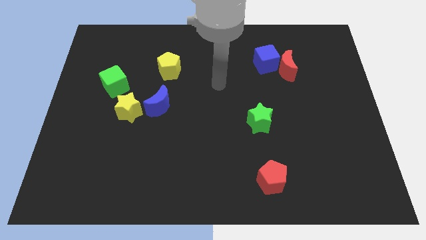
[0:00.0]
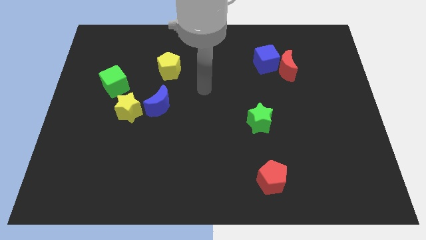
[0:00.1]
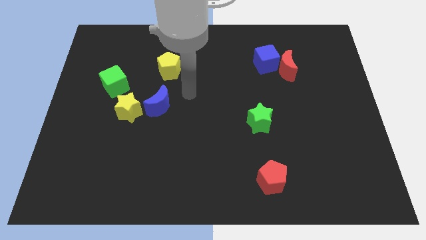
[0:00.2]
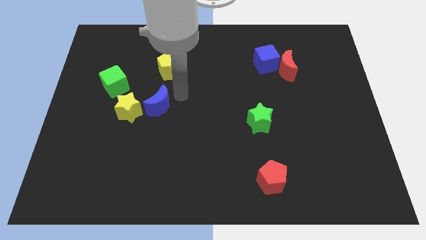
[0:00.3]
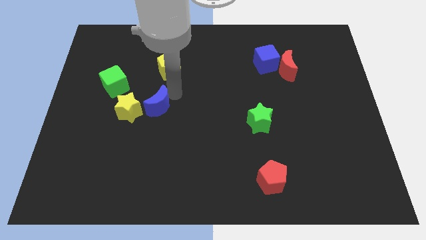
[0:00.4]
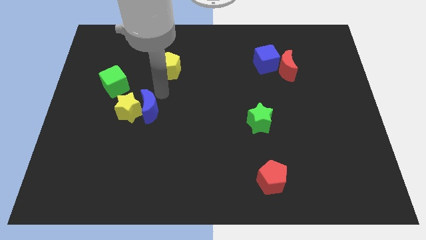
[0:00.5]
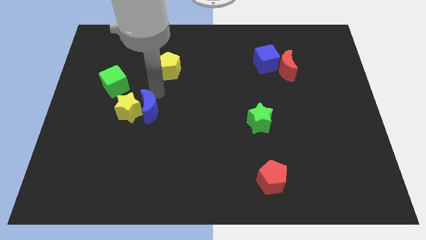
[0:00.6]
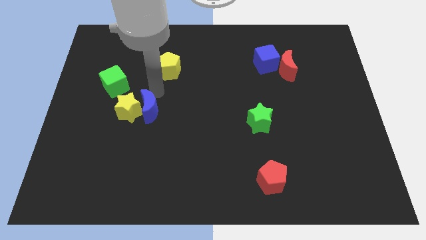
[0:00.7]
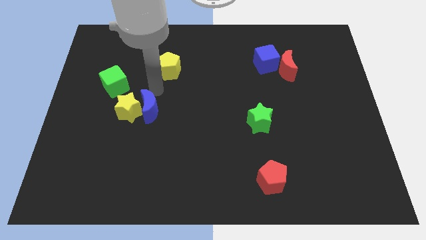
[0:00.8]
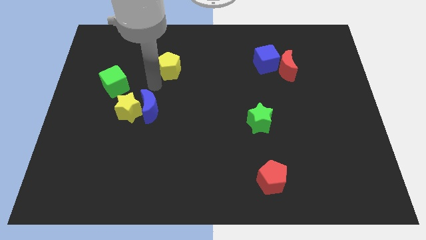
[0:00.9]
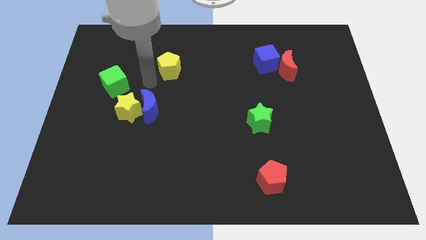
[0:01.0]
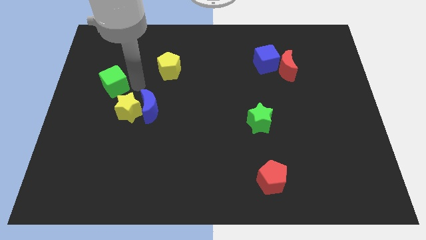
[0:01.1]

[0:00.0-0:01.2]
place your arm above the blue moon

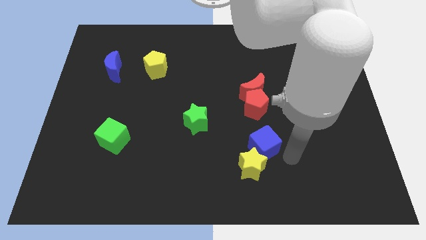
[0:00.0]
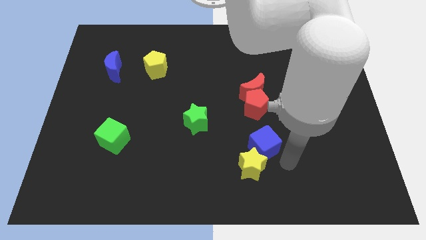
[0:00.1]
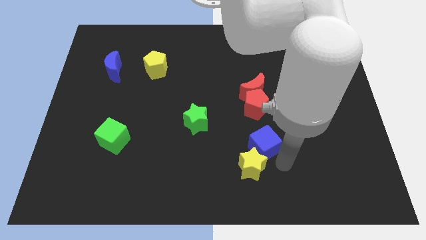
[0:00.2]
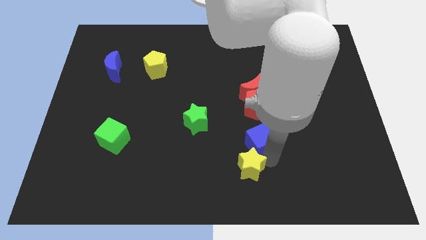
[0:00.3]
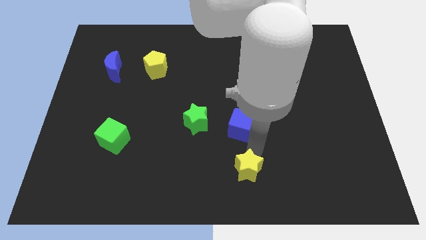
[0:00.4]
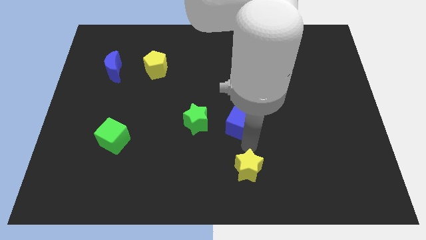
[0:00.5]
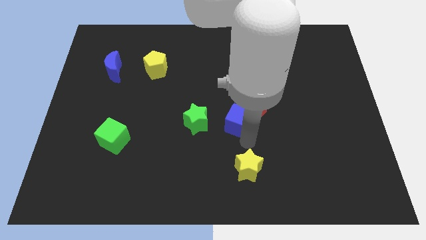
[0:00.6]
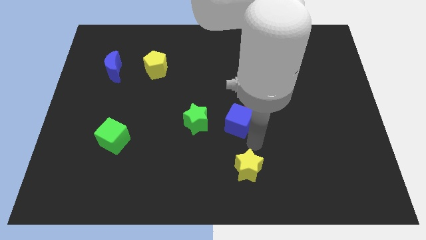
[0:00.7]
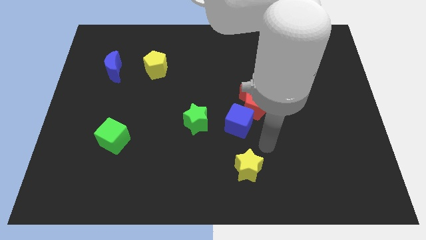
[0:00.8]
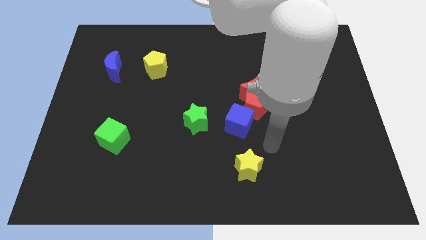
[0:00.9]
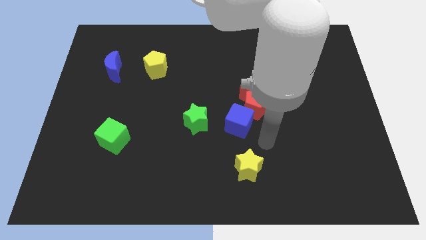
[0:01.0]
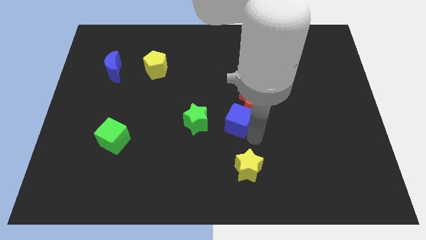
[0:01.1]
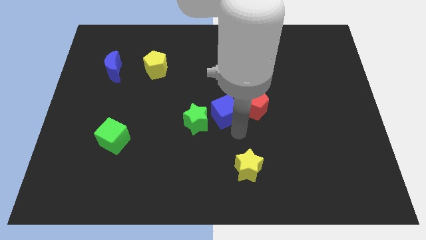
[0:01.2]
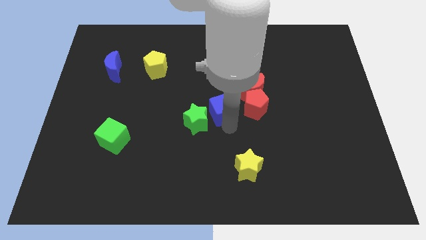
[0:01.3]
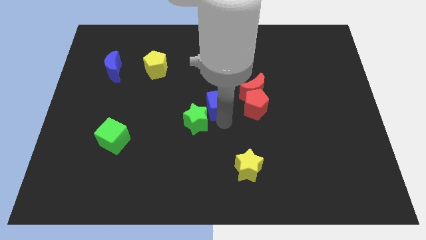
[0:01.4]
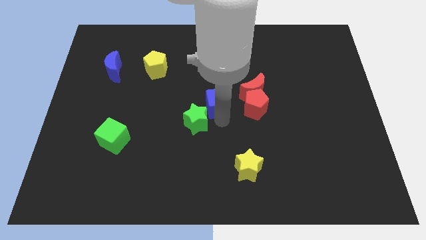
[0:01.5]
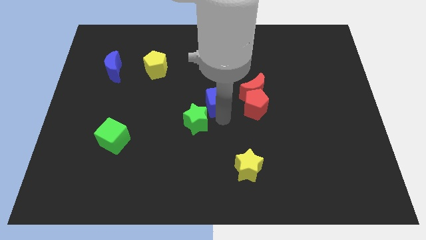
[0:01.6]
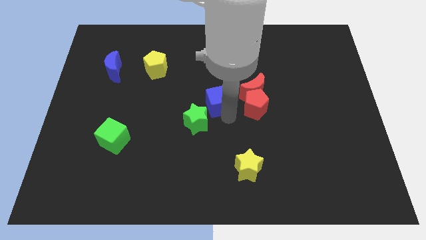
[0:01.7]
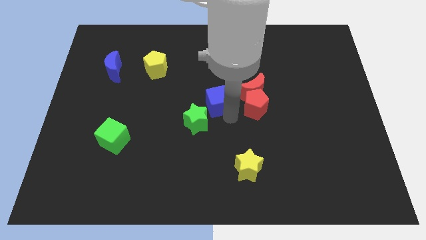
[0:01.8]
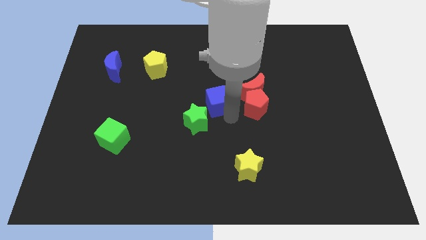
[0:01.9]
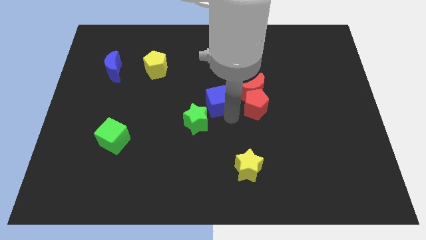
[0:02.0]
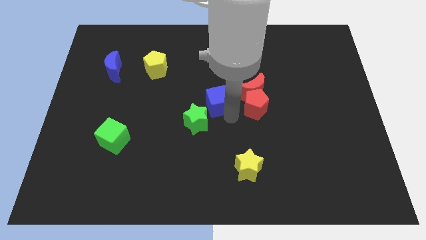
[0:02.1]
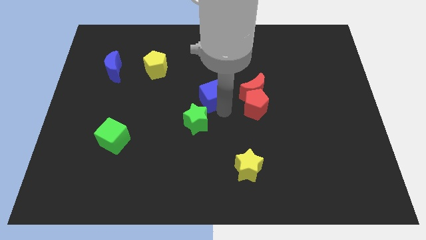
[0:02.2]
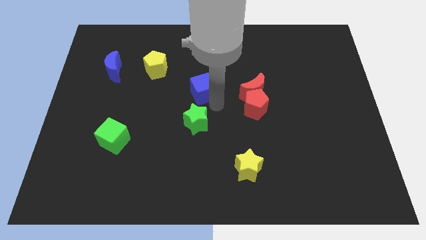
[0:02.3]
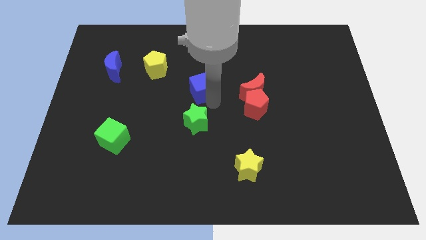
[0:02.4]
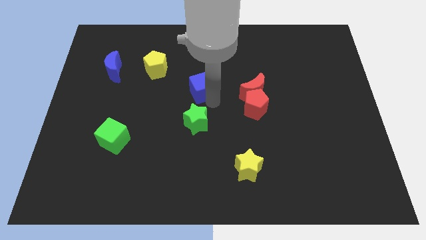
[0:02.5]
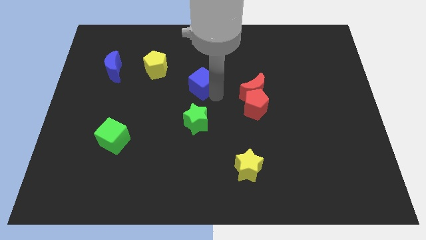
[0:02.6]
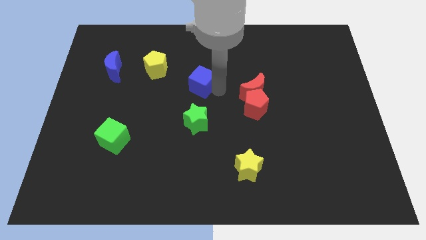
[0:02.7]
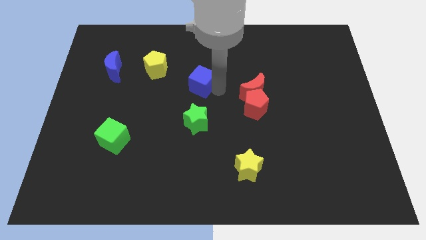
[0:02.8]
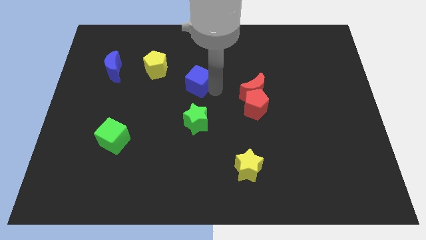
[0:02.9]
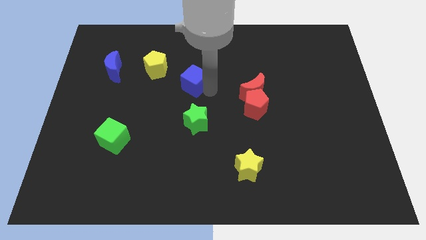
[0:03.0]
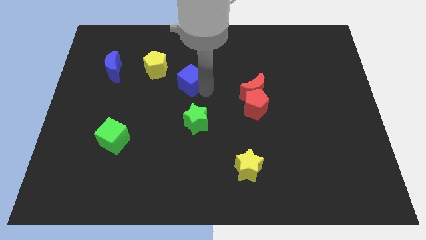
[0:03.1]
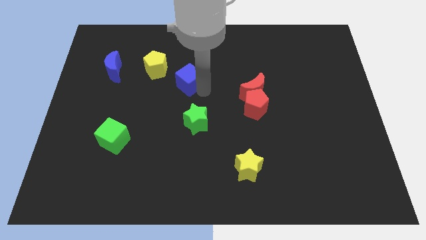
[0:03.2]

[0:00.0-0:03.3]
move the blue cube to the top of the green star

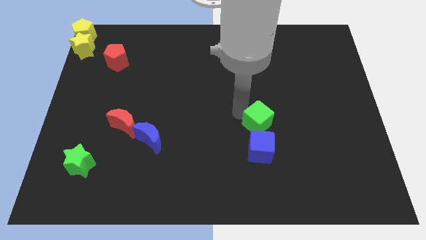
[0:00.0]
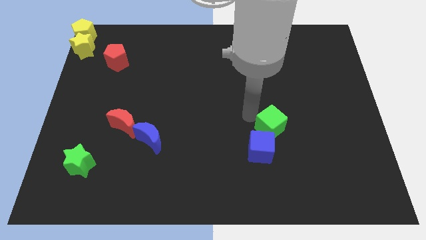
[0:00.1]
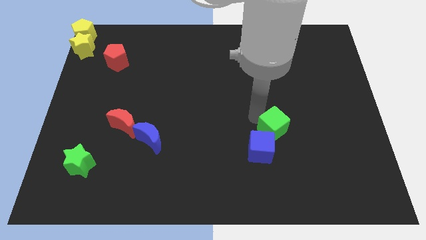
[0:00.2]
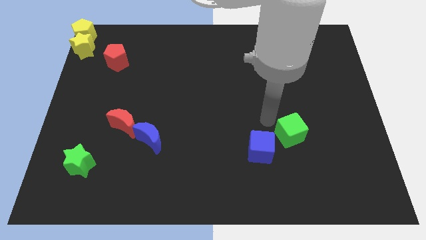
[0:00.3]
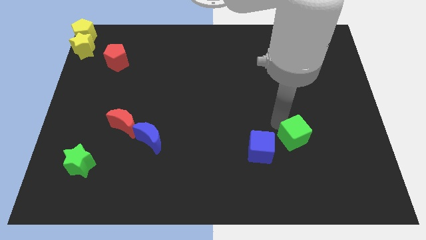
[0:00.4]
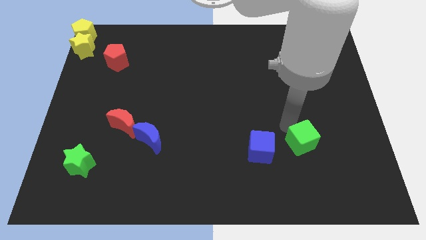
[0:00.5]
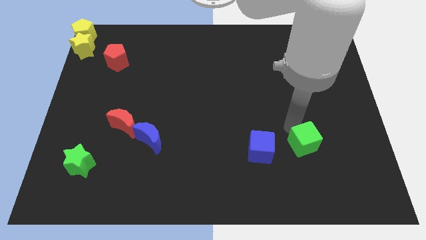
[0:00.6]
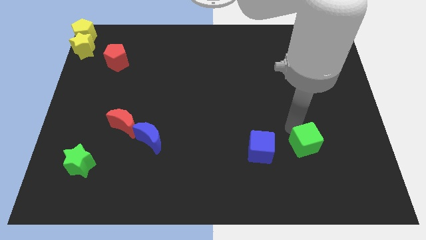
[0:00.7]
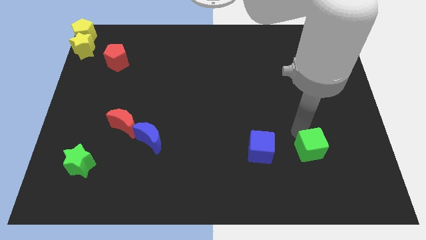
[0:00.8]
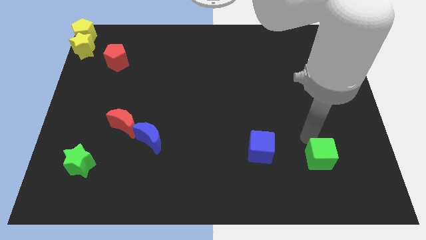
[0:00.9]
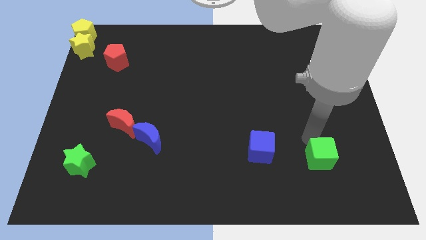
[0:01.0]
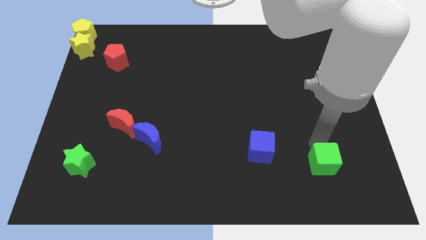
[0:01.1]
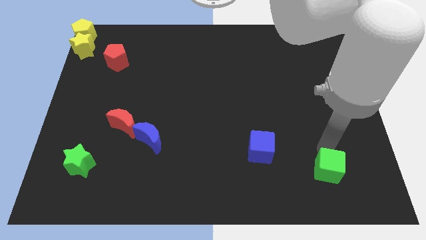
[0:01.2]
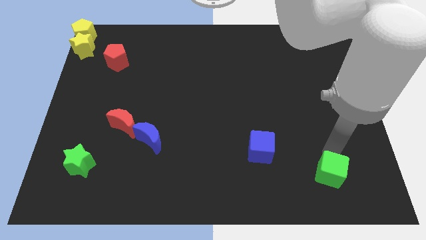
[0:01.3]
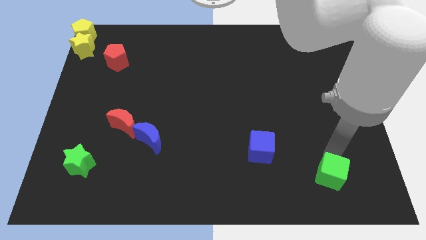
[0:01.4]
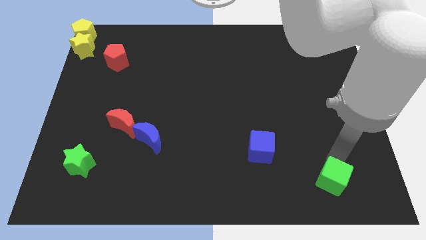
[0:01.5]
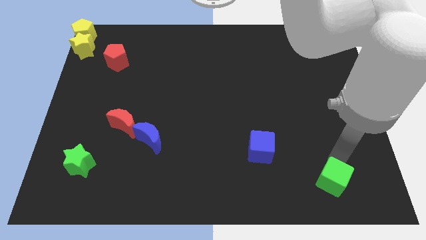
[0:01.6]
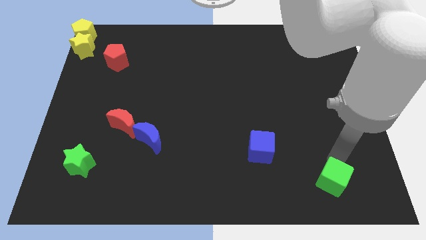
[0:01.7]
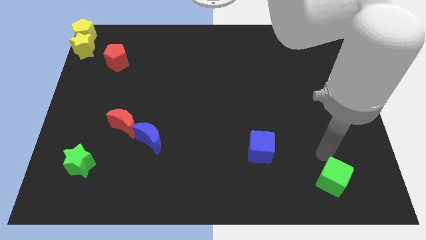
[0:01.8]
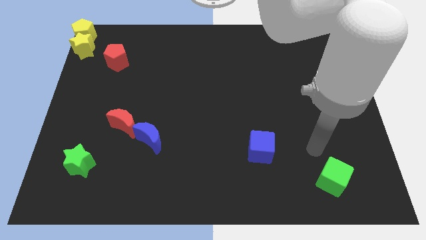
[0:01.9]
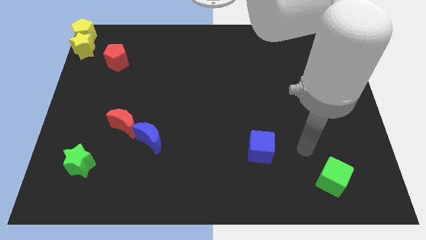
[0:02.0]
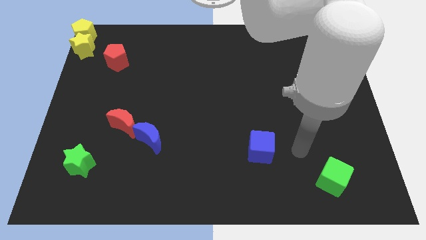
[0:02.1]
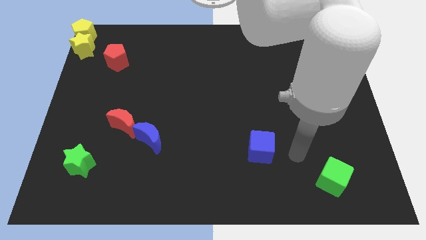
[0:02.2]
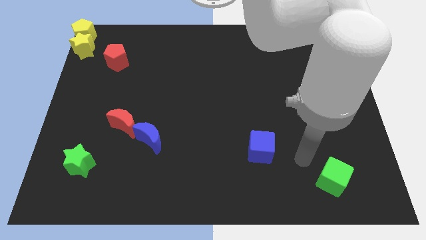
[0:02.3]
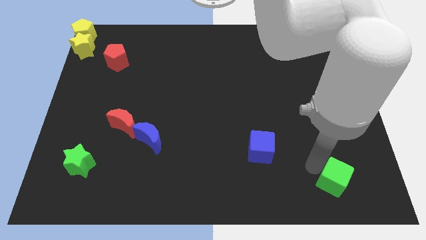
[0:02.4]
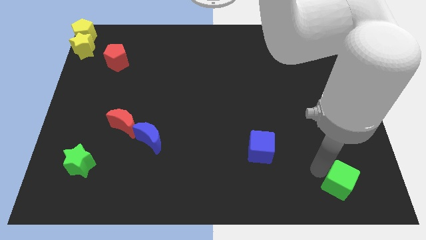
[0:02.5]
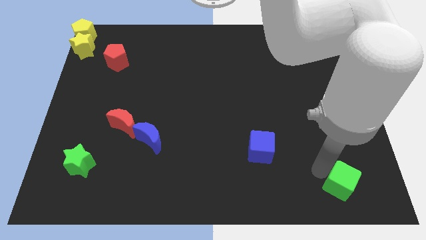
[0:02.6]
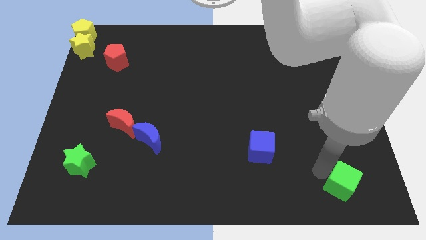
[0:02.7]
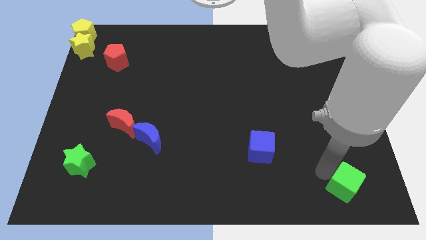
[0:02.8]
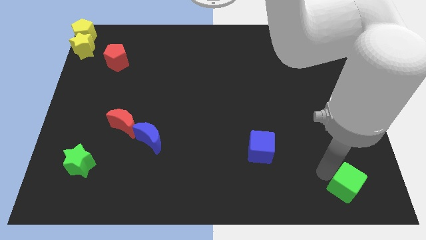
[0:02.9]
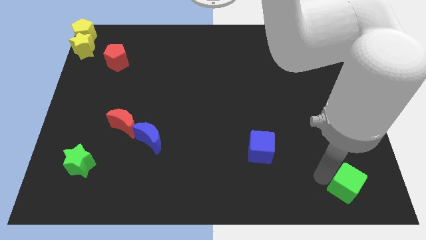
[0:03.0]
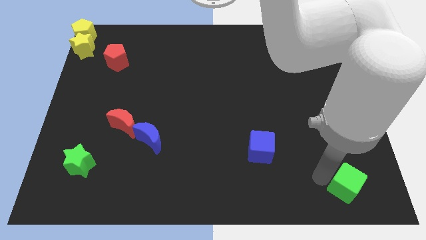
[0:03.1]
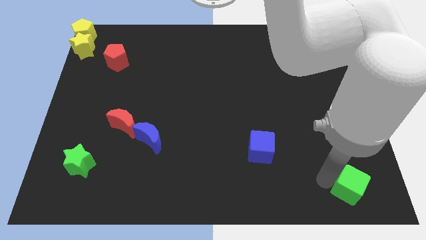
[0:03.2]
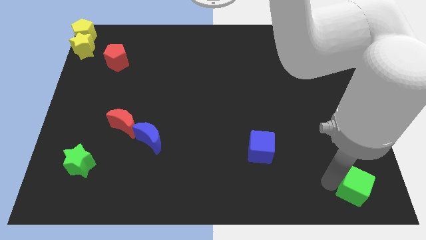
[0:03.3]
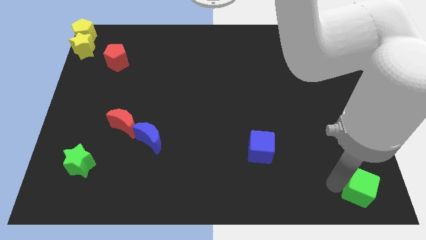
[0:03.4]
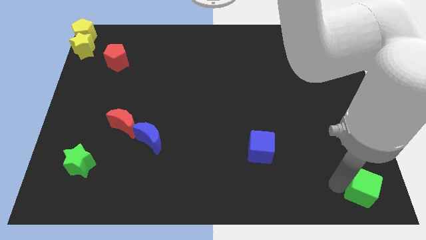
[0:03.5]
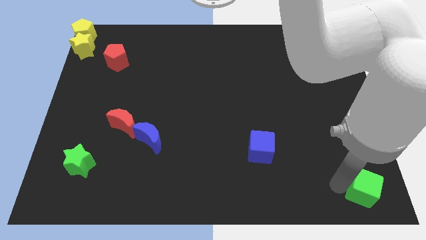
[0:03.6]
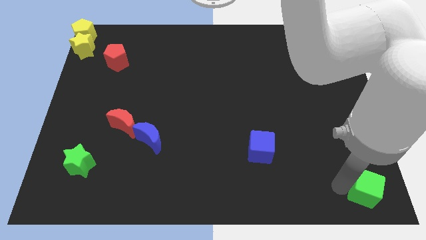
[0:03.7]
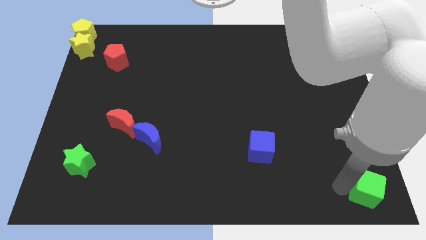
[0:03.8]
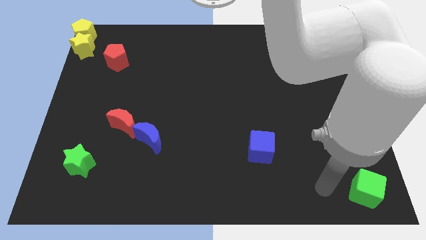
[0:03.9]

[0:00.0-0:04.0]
separate the green cube from the blue cube

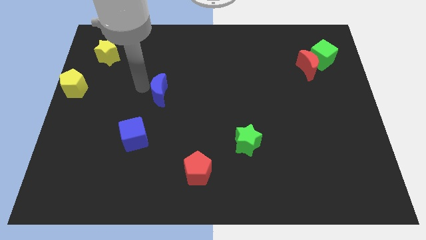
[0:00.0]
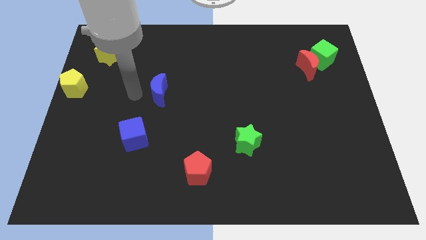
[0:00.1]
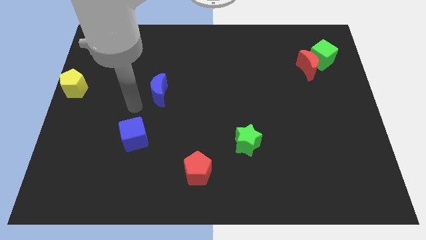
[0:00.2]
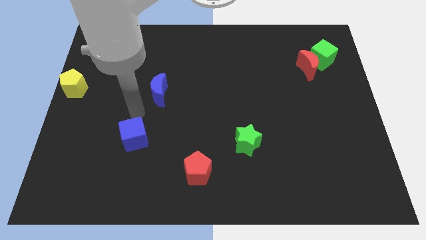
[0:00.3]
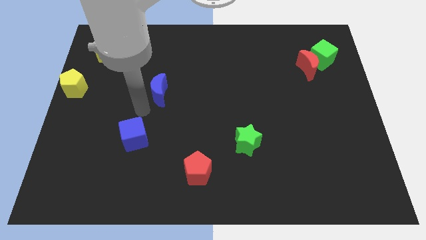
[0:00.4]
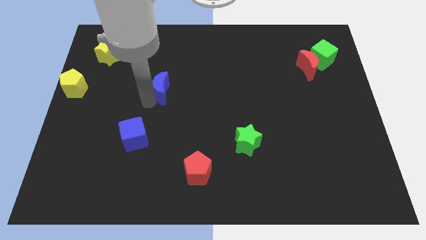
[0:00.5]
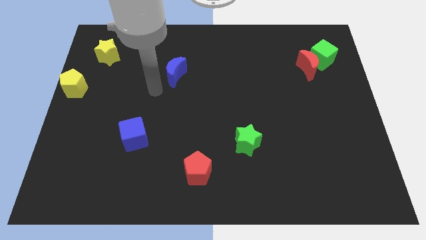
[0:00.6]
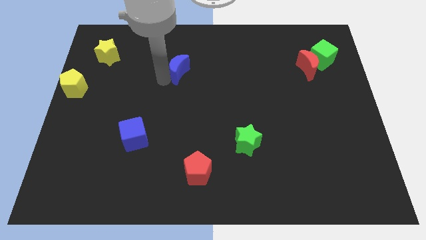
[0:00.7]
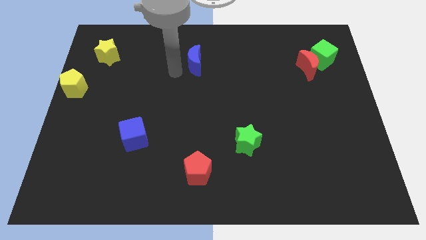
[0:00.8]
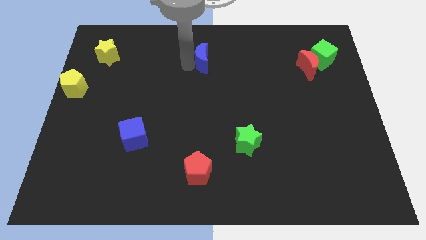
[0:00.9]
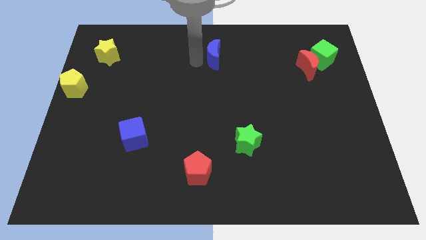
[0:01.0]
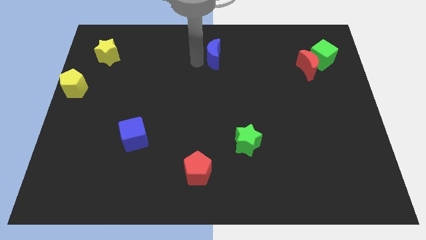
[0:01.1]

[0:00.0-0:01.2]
move the blue moon to the top center of the board
